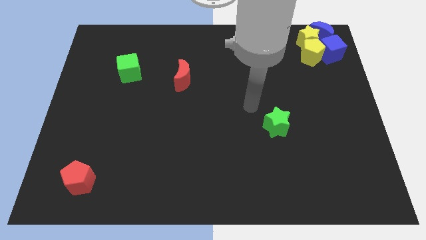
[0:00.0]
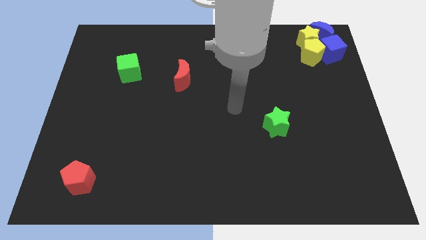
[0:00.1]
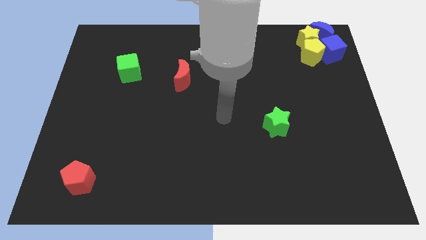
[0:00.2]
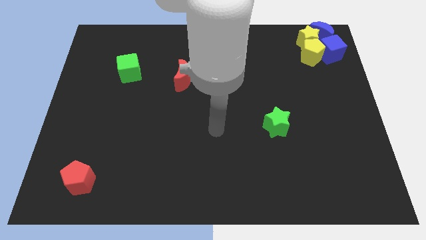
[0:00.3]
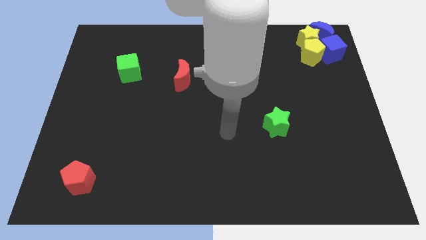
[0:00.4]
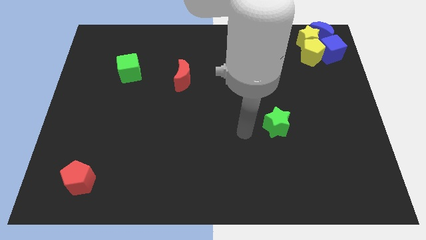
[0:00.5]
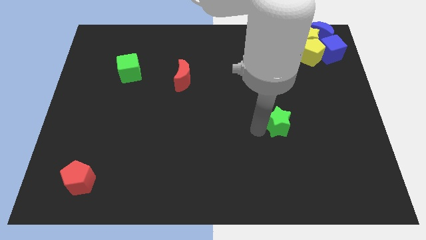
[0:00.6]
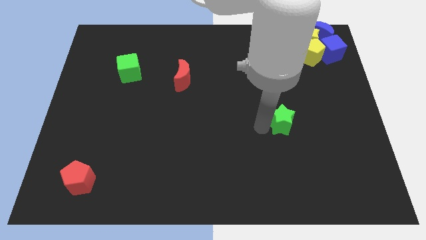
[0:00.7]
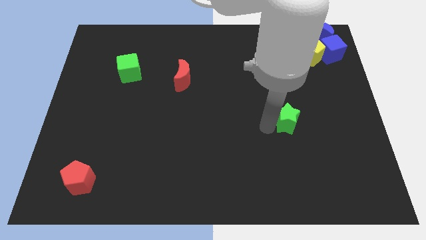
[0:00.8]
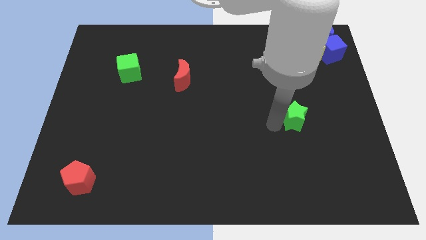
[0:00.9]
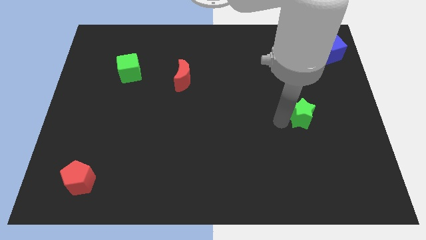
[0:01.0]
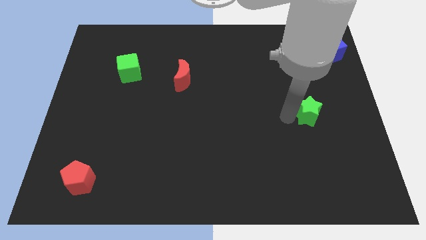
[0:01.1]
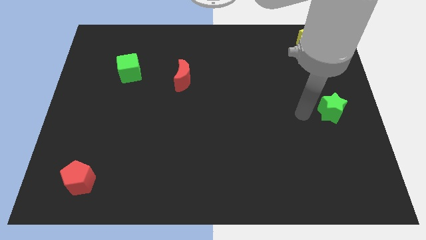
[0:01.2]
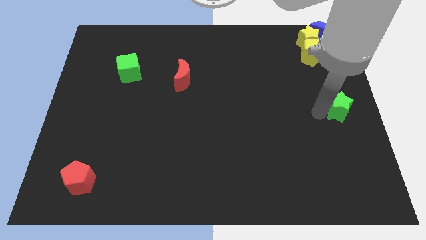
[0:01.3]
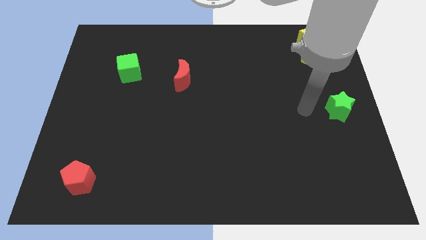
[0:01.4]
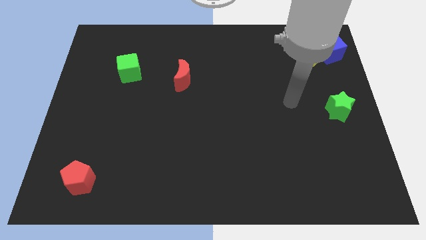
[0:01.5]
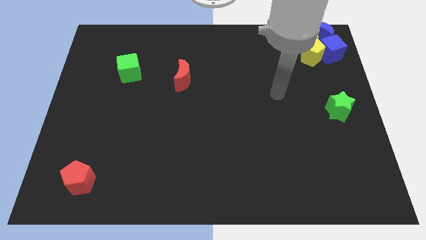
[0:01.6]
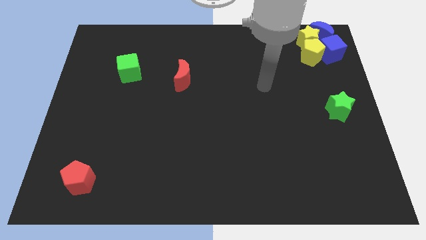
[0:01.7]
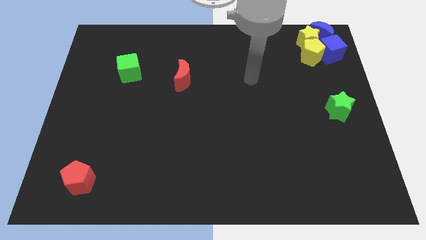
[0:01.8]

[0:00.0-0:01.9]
slightly move the green star to the center right side

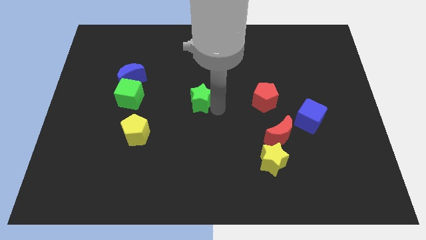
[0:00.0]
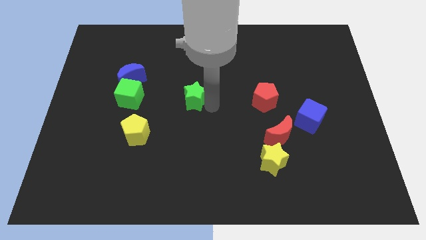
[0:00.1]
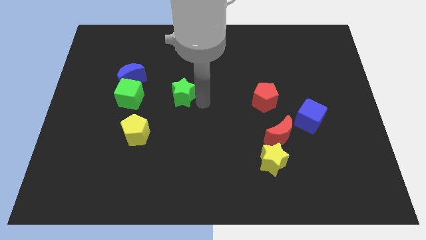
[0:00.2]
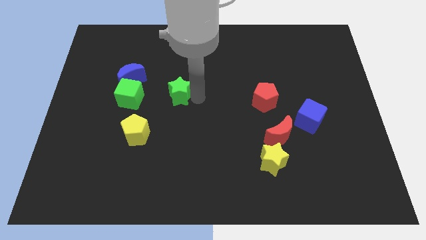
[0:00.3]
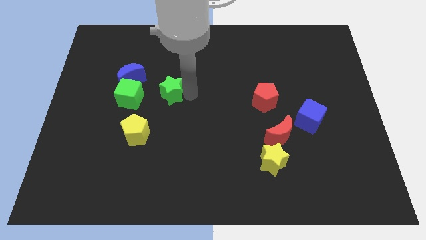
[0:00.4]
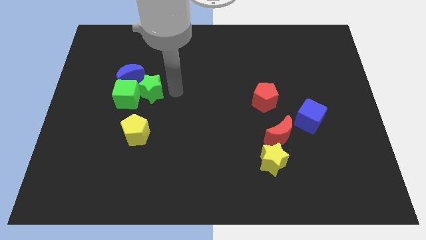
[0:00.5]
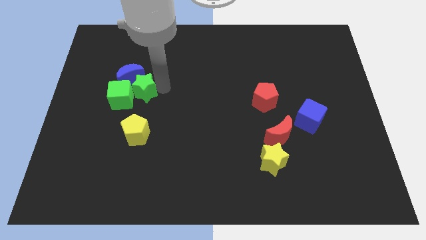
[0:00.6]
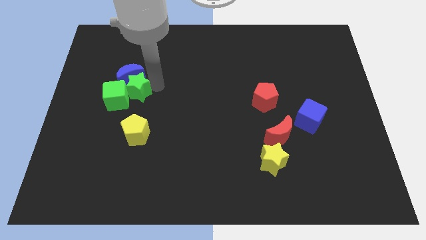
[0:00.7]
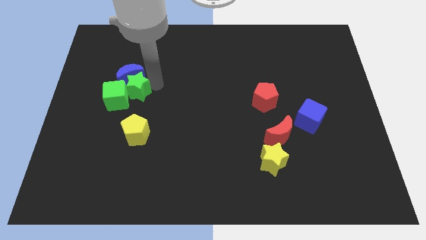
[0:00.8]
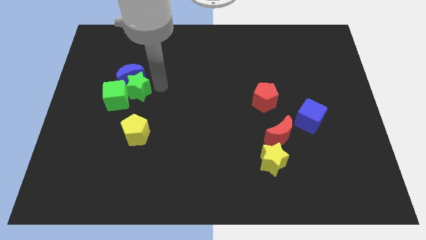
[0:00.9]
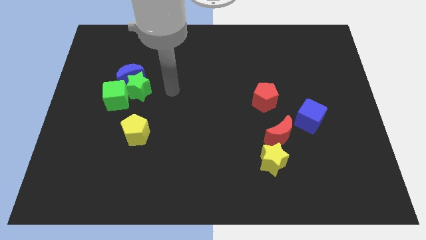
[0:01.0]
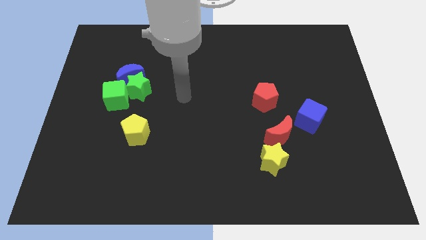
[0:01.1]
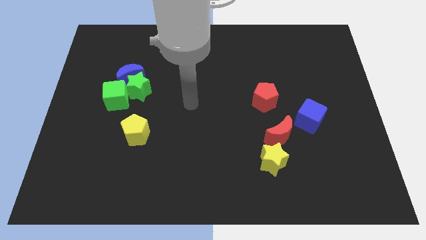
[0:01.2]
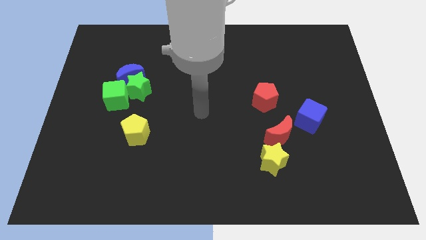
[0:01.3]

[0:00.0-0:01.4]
drag the green star close to the green cube

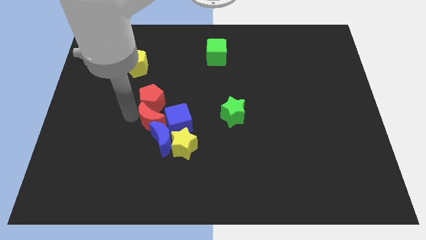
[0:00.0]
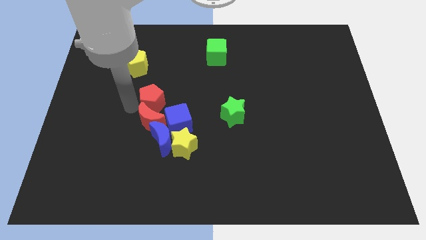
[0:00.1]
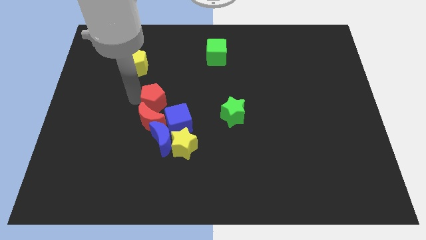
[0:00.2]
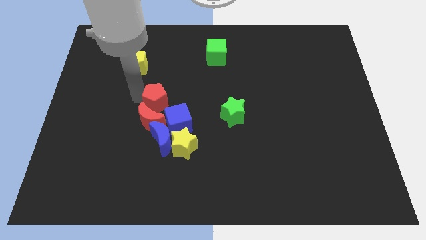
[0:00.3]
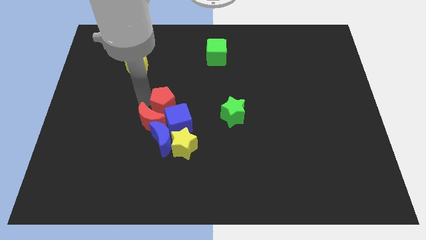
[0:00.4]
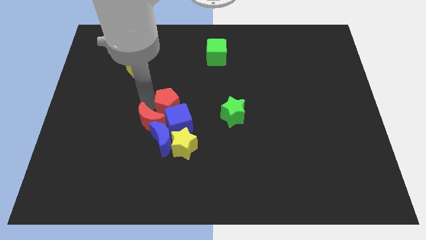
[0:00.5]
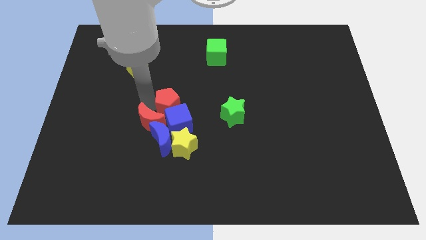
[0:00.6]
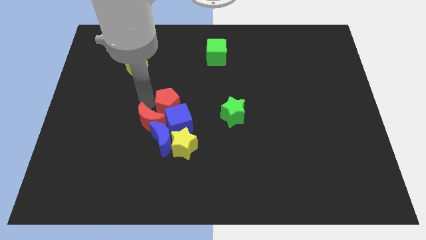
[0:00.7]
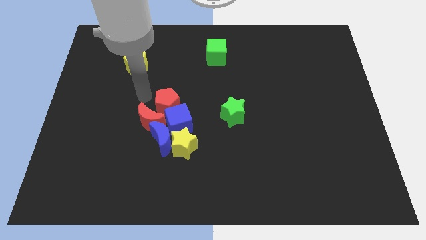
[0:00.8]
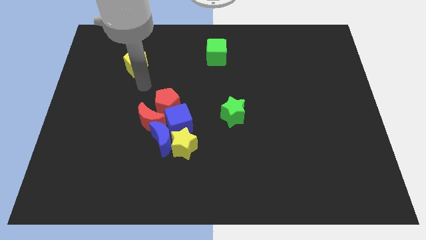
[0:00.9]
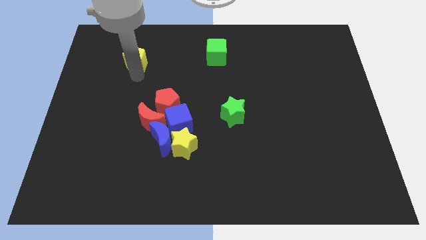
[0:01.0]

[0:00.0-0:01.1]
push the red pentagon to the top of the blue cube

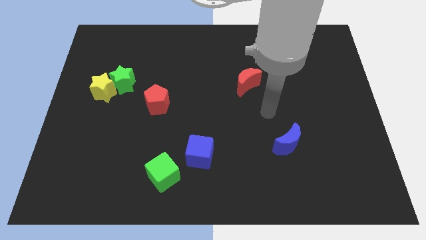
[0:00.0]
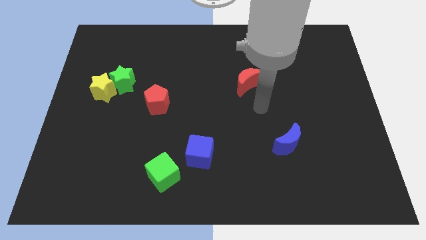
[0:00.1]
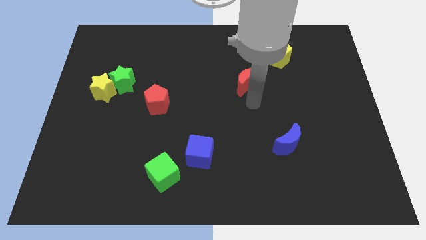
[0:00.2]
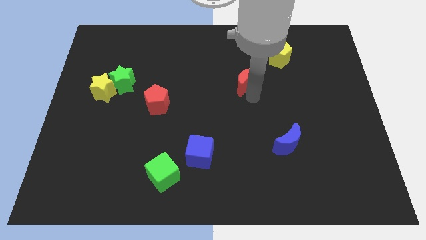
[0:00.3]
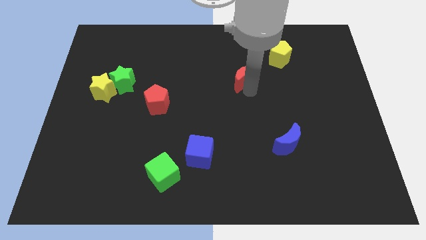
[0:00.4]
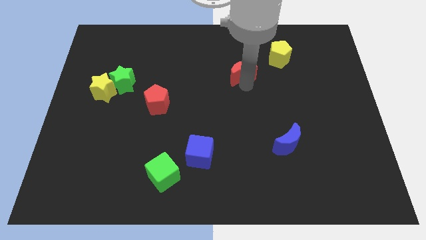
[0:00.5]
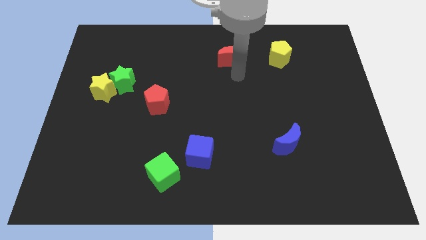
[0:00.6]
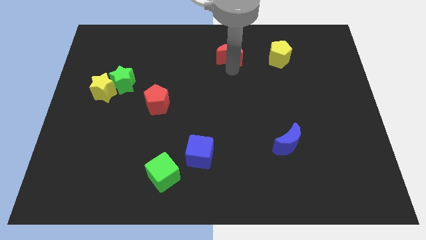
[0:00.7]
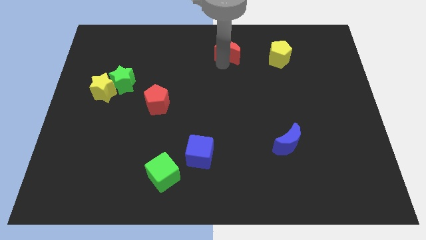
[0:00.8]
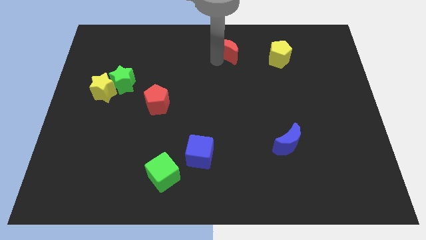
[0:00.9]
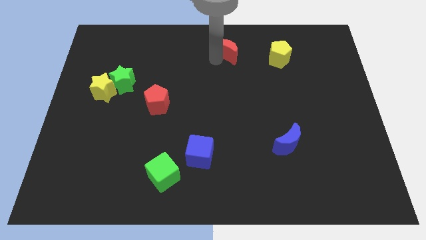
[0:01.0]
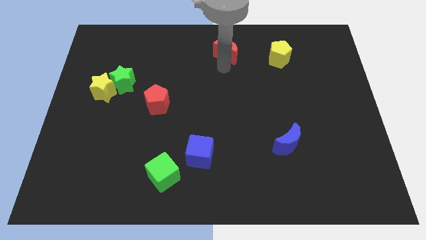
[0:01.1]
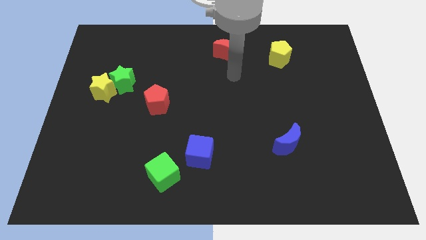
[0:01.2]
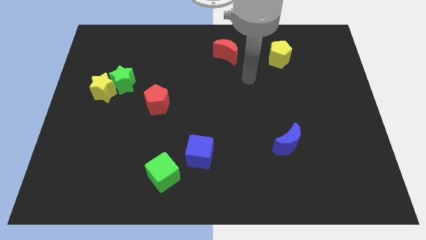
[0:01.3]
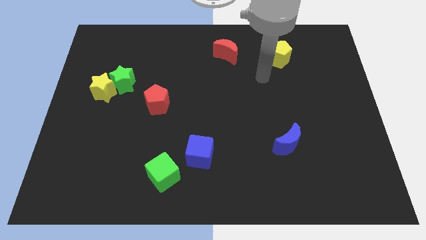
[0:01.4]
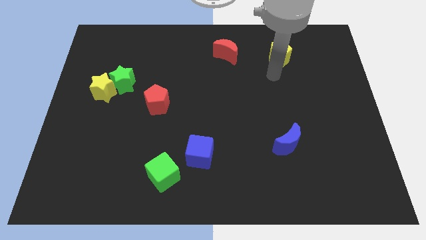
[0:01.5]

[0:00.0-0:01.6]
place the red crescent to the left of the yellow pentagon

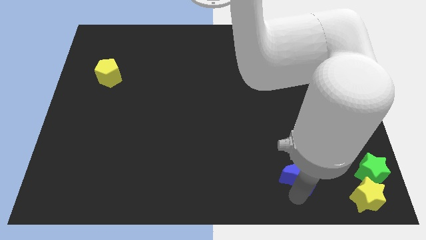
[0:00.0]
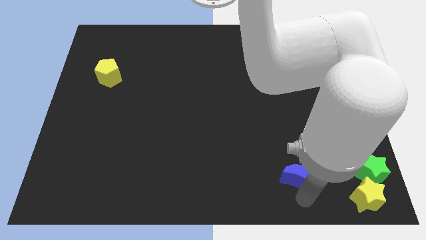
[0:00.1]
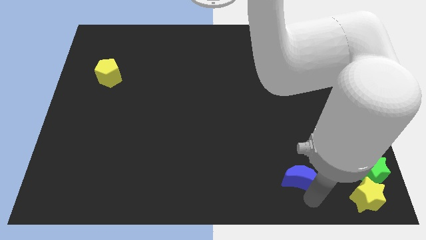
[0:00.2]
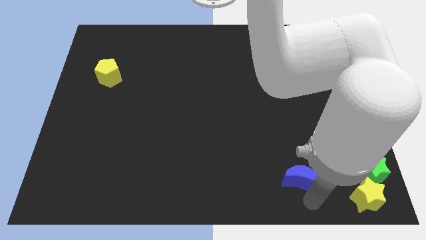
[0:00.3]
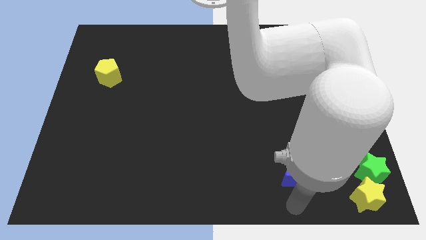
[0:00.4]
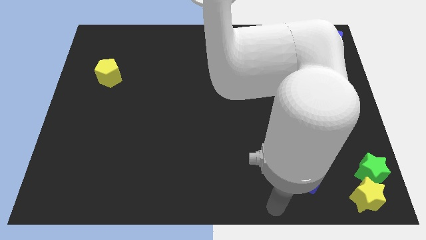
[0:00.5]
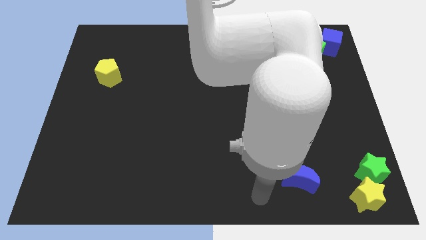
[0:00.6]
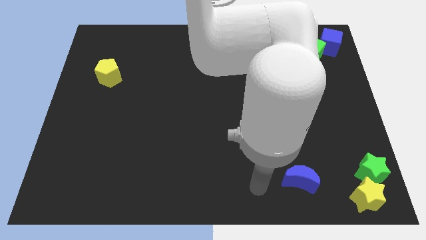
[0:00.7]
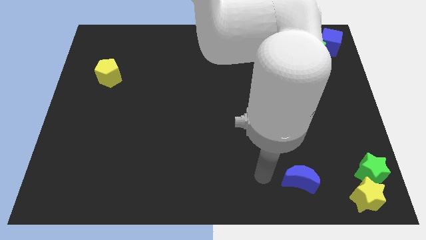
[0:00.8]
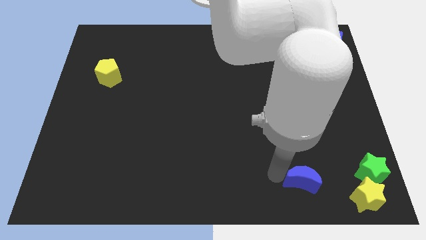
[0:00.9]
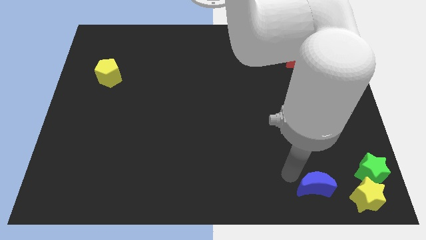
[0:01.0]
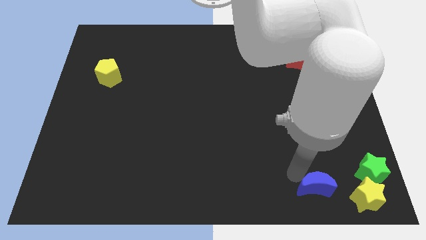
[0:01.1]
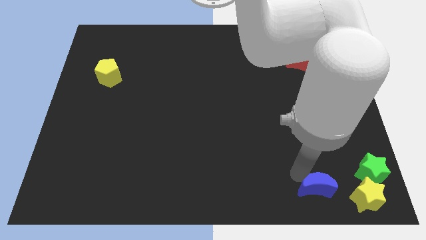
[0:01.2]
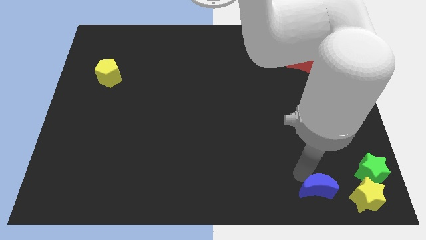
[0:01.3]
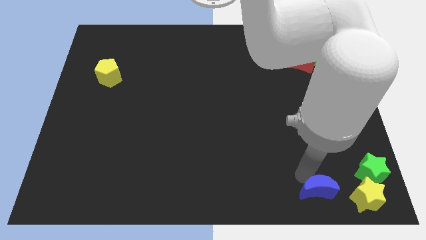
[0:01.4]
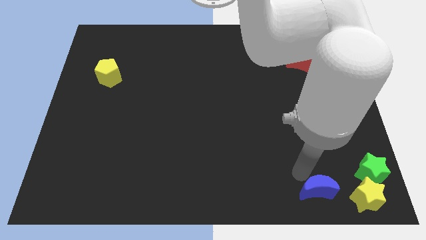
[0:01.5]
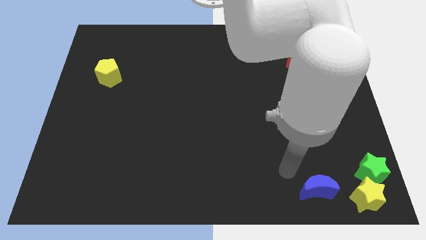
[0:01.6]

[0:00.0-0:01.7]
move the blue crescent to the left of the yellow star

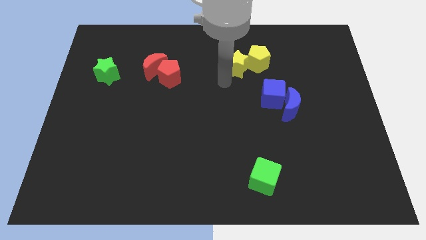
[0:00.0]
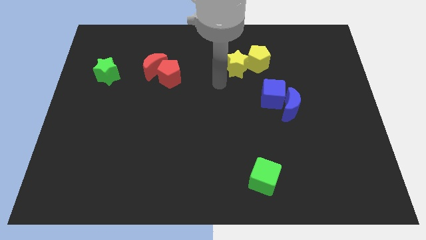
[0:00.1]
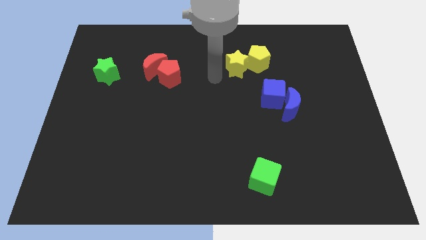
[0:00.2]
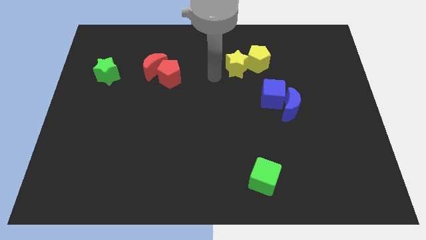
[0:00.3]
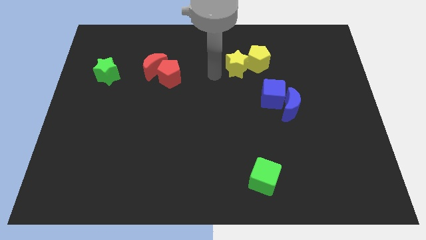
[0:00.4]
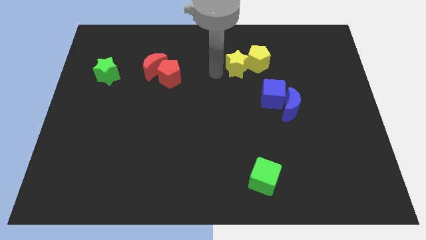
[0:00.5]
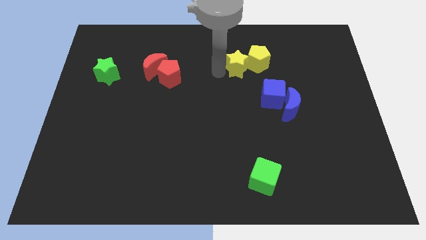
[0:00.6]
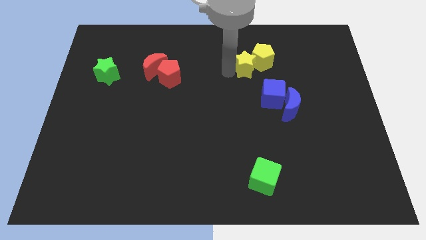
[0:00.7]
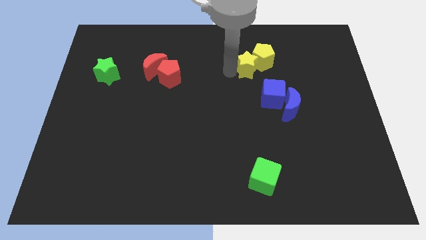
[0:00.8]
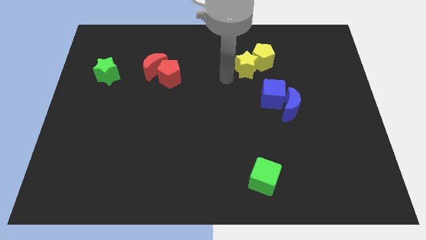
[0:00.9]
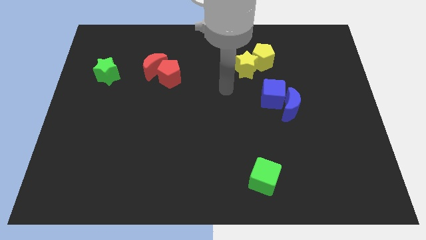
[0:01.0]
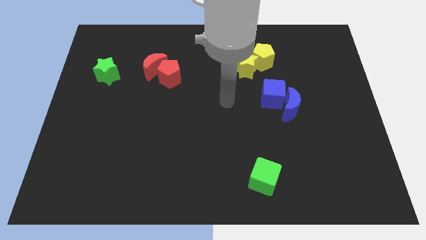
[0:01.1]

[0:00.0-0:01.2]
slightly push the yellow blocks towards the top side of the board
